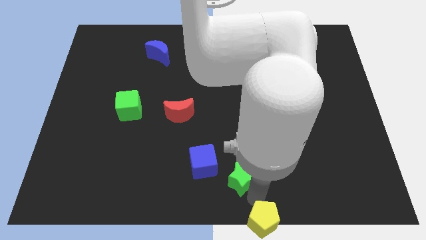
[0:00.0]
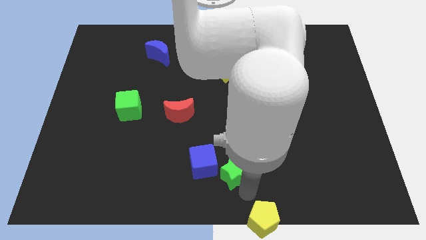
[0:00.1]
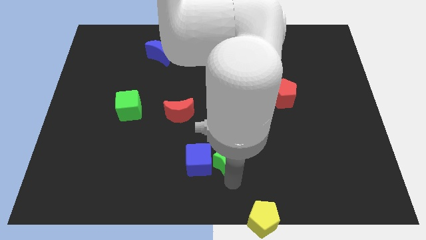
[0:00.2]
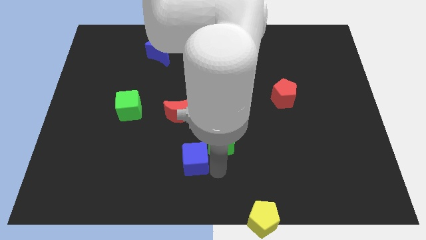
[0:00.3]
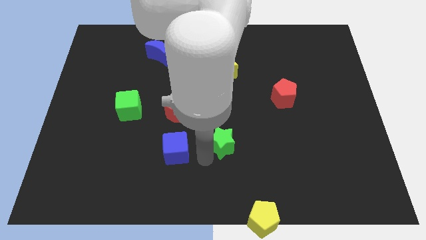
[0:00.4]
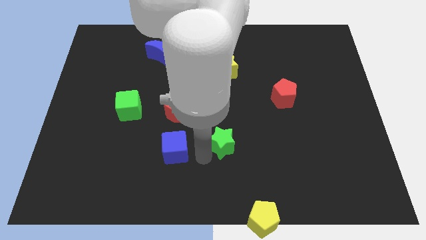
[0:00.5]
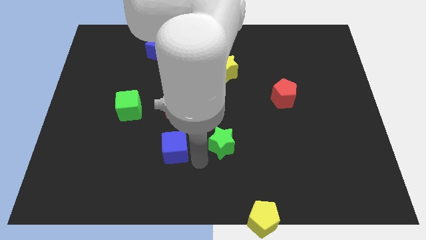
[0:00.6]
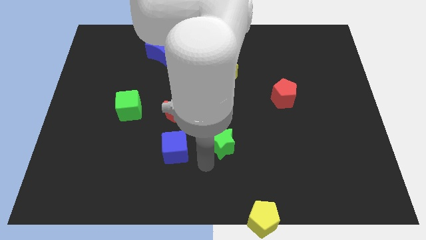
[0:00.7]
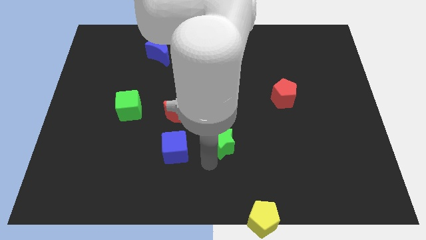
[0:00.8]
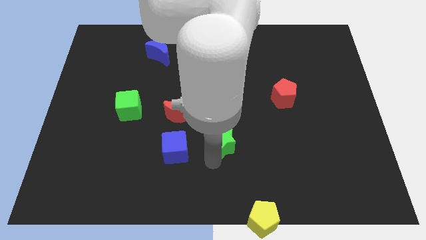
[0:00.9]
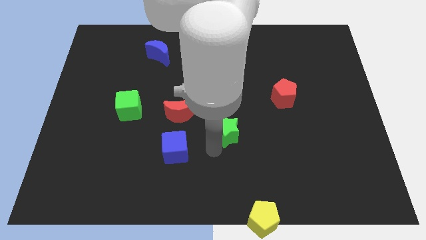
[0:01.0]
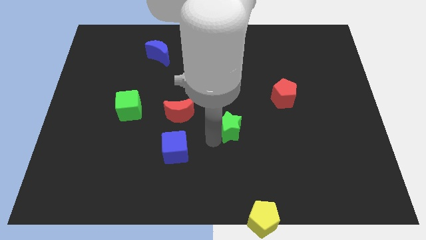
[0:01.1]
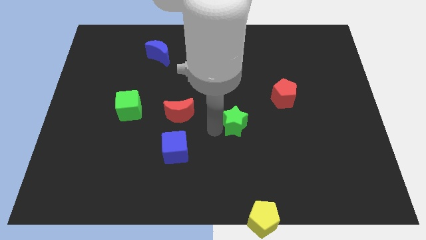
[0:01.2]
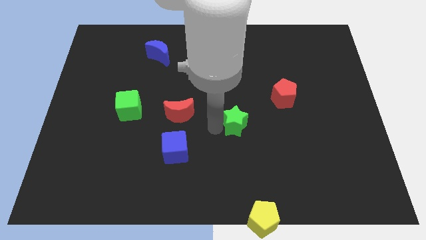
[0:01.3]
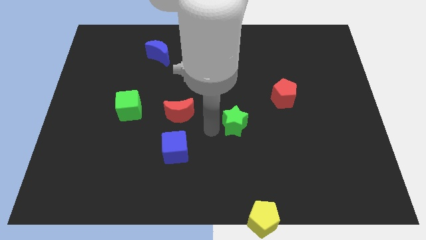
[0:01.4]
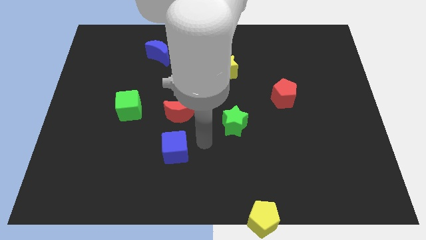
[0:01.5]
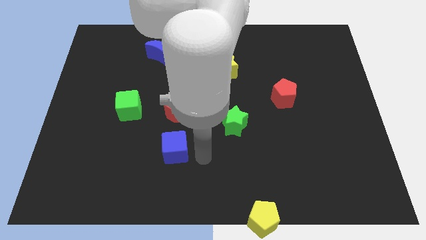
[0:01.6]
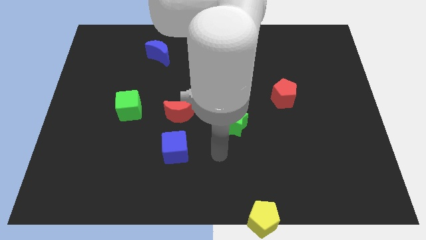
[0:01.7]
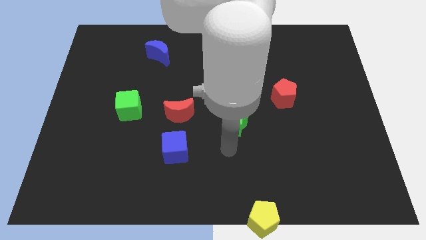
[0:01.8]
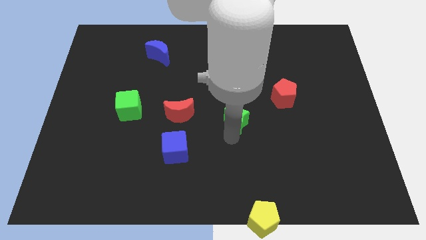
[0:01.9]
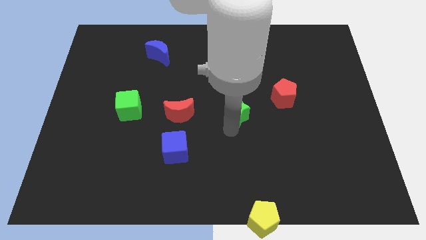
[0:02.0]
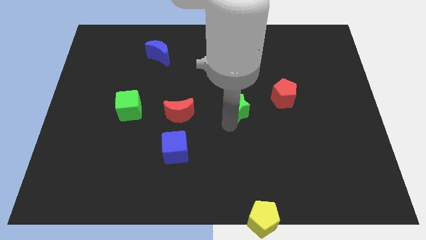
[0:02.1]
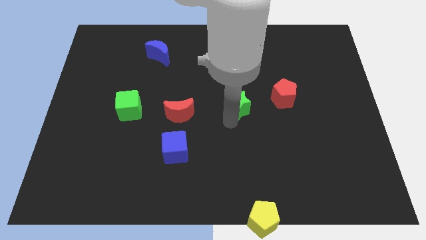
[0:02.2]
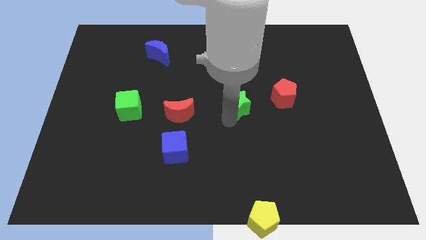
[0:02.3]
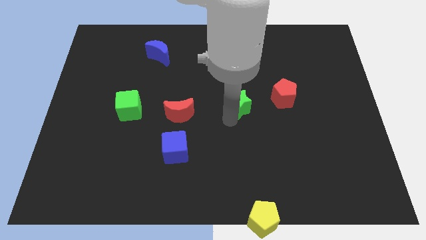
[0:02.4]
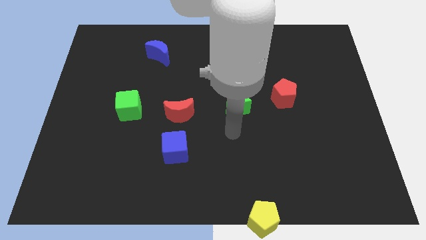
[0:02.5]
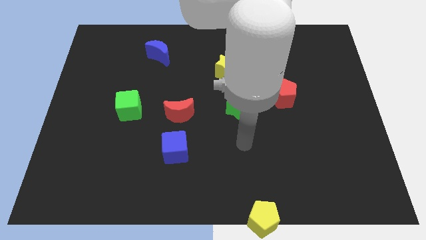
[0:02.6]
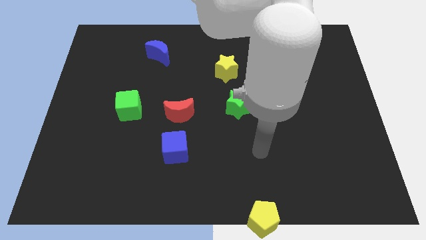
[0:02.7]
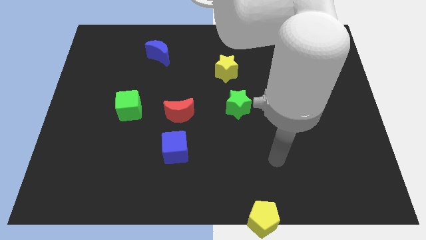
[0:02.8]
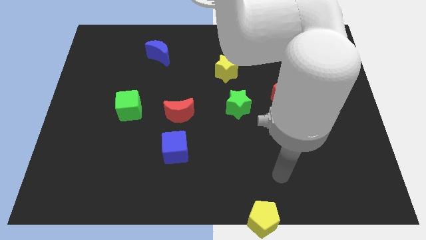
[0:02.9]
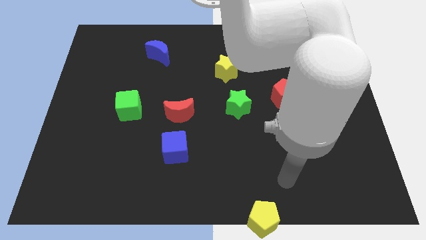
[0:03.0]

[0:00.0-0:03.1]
place the green star left to the red pentagon

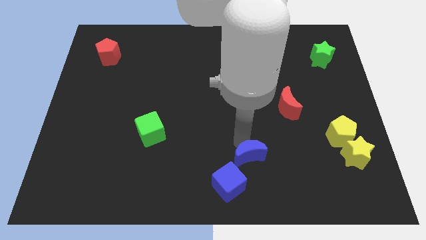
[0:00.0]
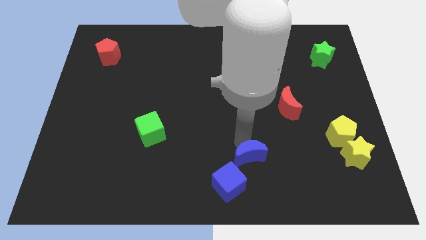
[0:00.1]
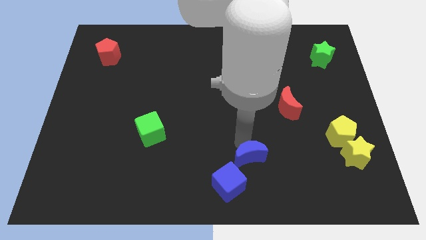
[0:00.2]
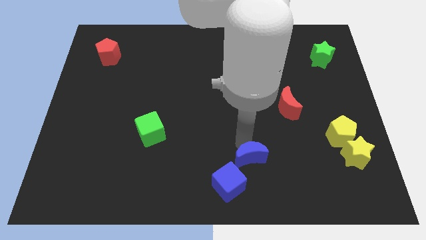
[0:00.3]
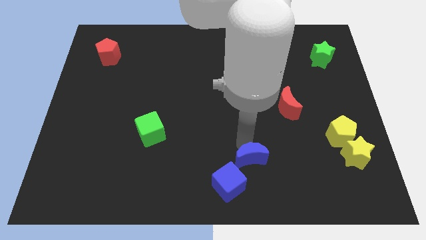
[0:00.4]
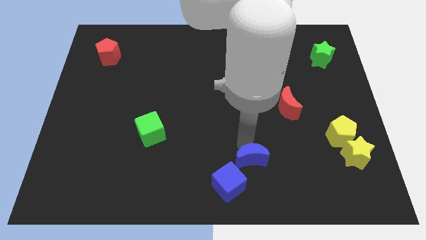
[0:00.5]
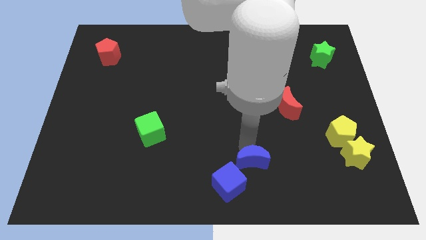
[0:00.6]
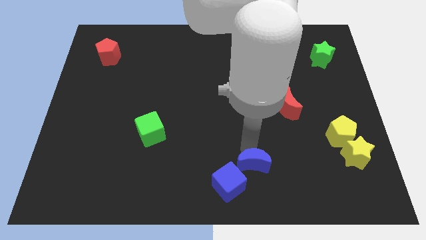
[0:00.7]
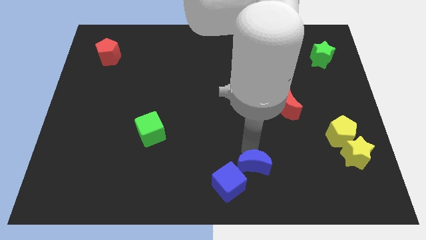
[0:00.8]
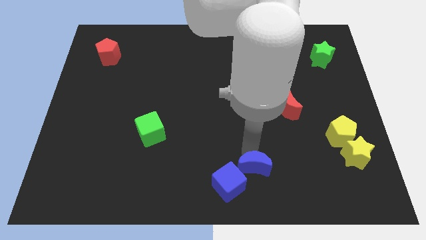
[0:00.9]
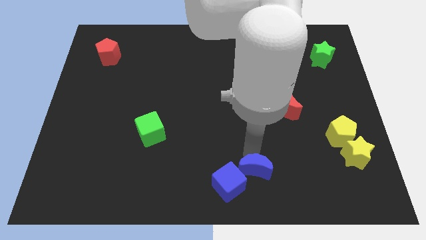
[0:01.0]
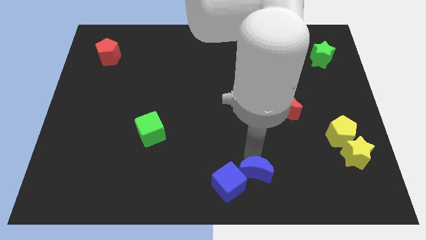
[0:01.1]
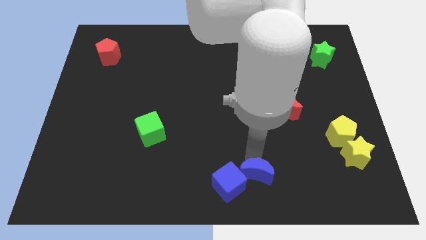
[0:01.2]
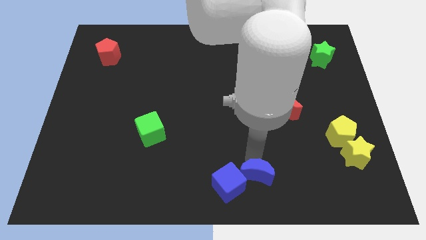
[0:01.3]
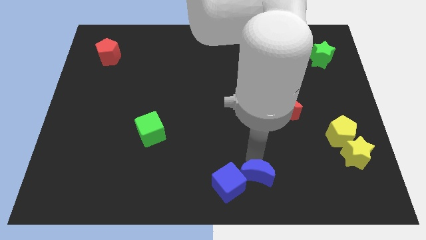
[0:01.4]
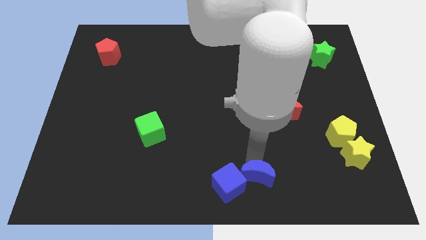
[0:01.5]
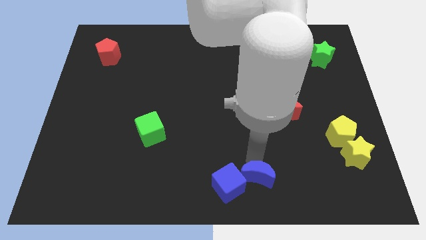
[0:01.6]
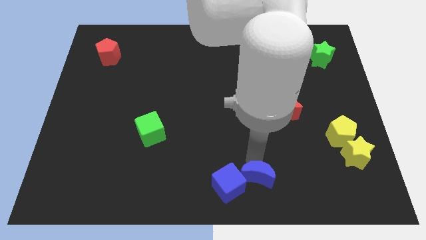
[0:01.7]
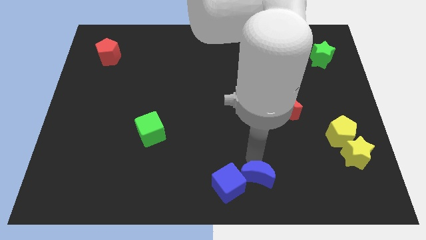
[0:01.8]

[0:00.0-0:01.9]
push the blue crescent into blue square

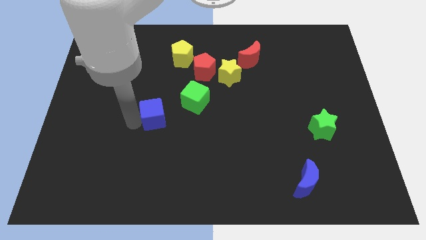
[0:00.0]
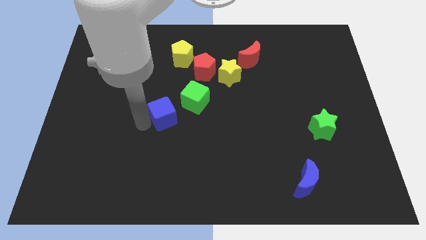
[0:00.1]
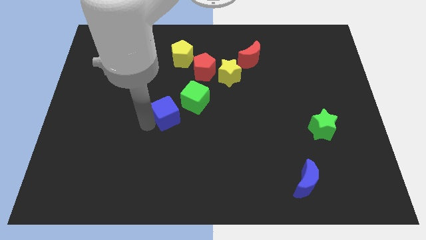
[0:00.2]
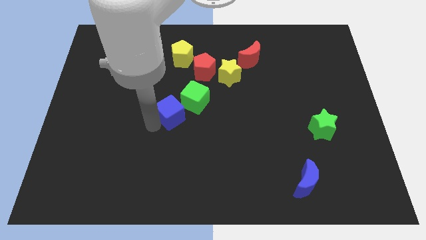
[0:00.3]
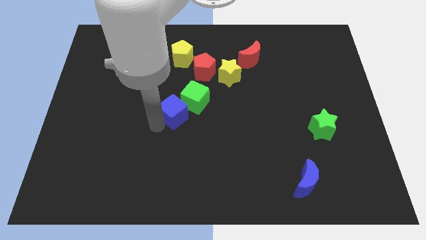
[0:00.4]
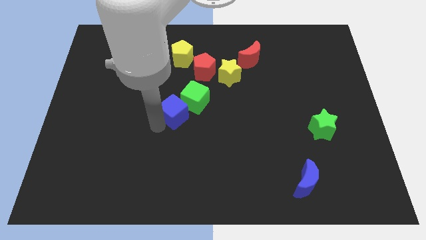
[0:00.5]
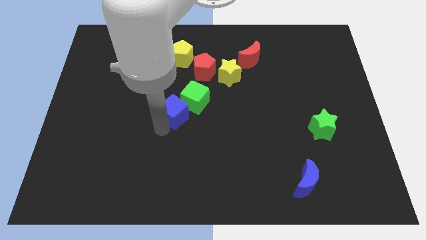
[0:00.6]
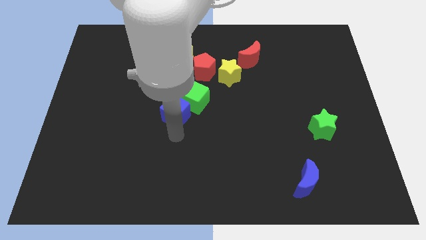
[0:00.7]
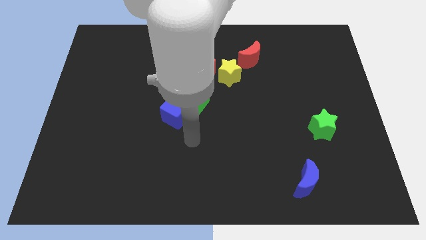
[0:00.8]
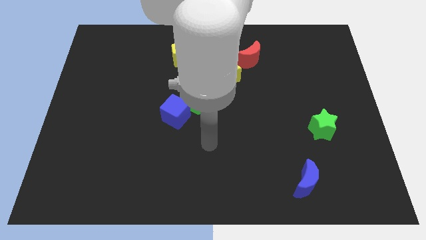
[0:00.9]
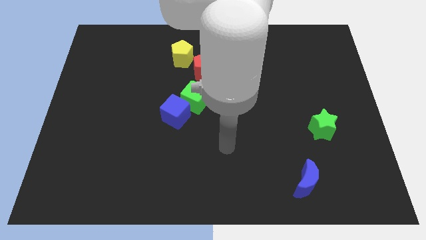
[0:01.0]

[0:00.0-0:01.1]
move the blue cube close to the green cube

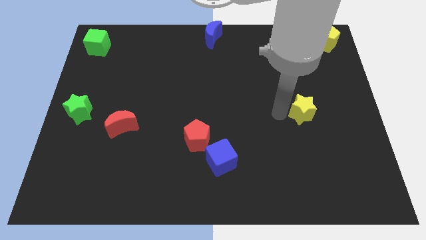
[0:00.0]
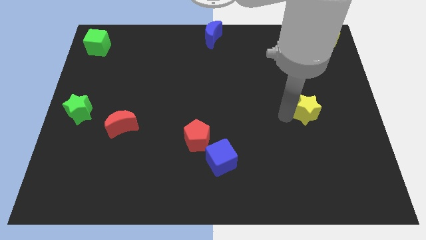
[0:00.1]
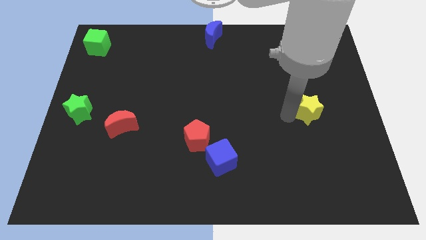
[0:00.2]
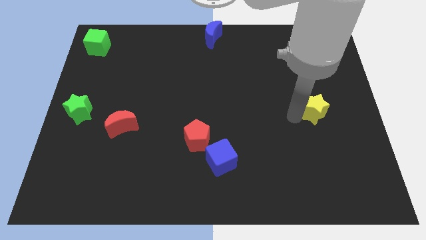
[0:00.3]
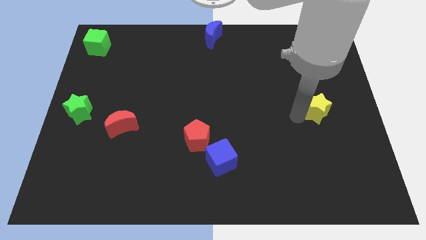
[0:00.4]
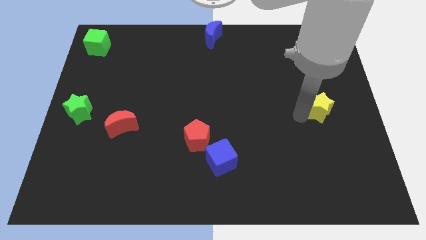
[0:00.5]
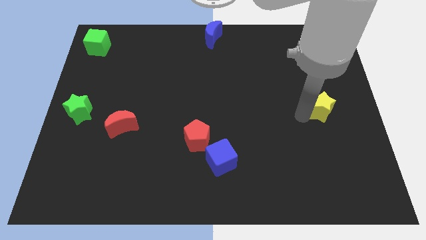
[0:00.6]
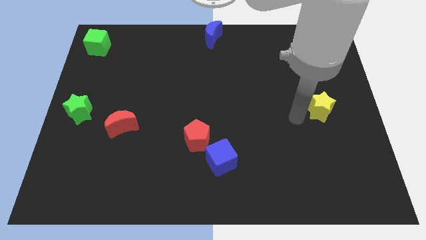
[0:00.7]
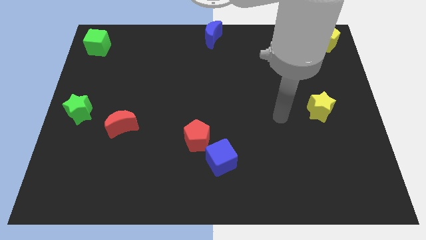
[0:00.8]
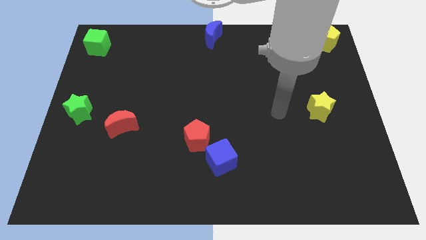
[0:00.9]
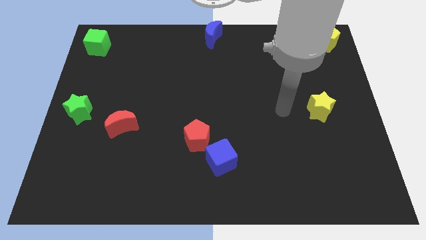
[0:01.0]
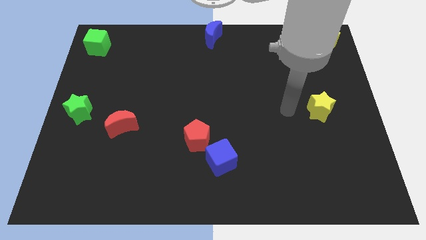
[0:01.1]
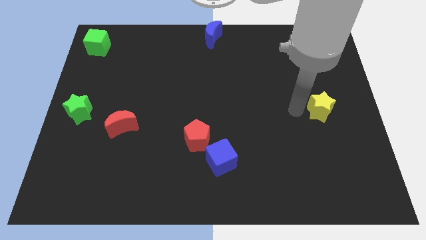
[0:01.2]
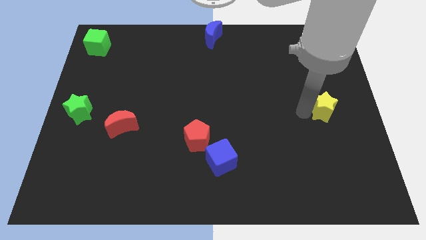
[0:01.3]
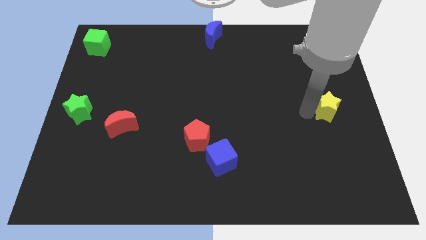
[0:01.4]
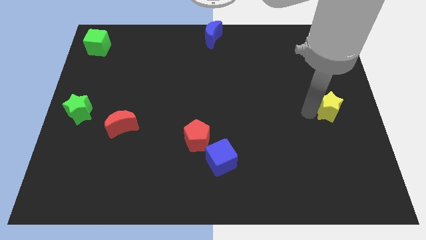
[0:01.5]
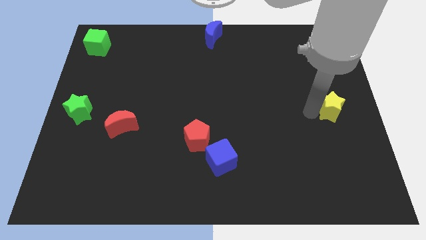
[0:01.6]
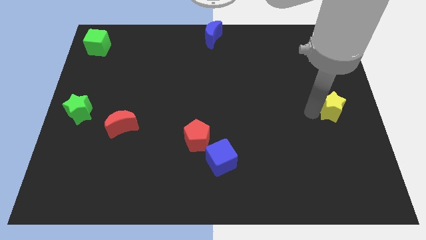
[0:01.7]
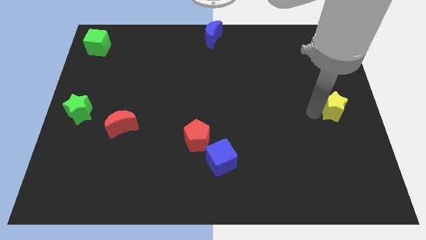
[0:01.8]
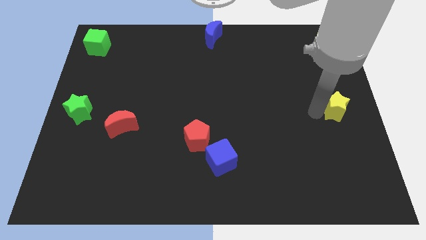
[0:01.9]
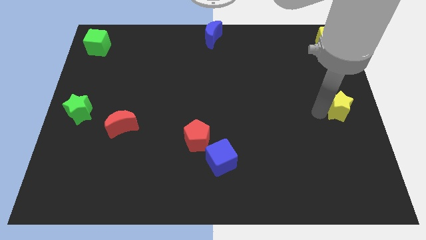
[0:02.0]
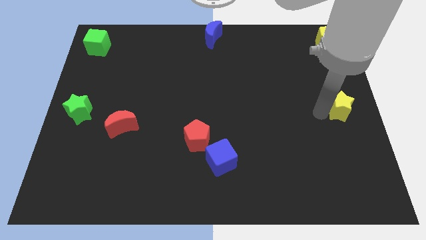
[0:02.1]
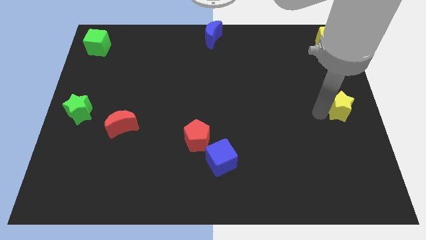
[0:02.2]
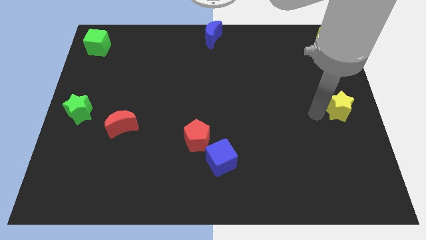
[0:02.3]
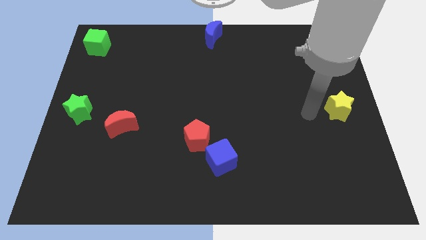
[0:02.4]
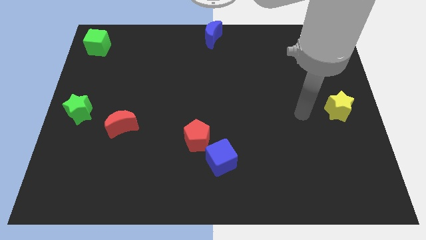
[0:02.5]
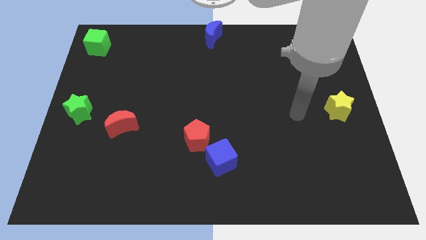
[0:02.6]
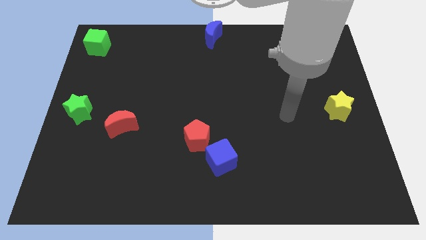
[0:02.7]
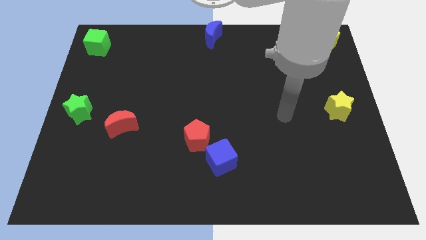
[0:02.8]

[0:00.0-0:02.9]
move the yellow star slightly to the right side of the board
